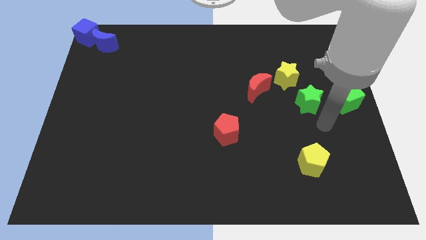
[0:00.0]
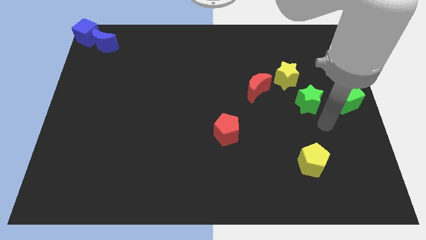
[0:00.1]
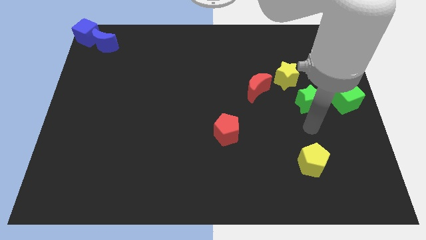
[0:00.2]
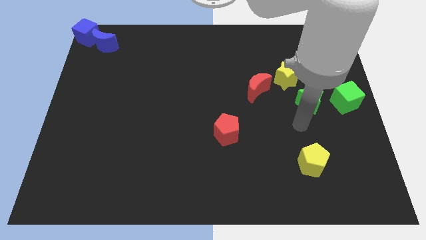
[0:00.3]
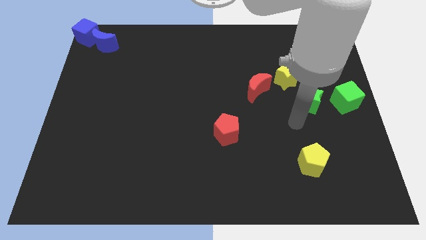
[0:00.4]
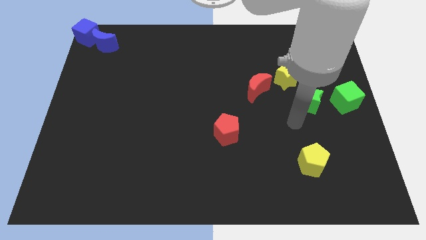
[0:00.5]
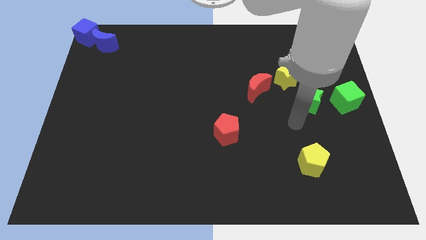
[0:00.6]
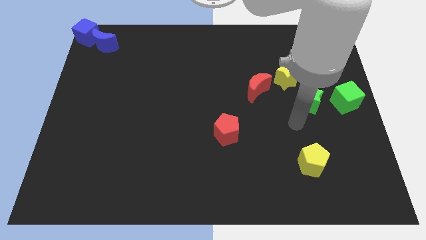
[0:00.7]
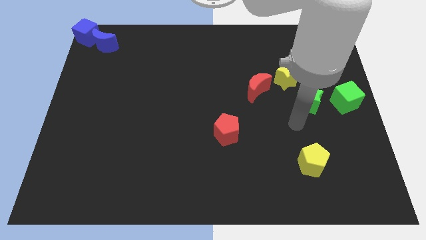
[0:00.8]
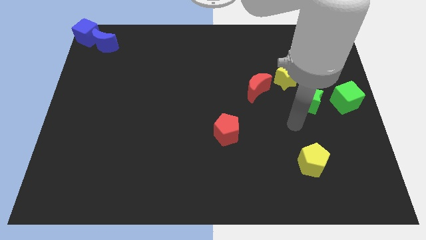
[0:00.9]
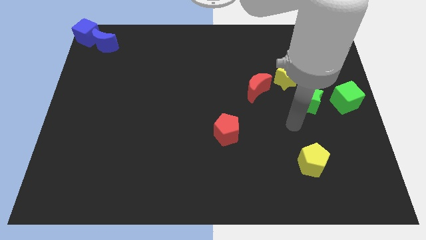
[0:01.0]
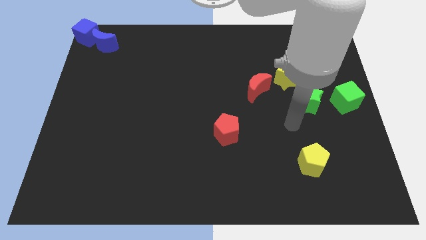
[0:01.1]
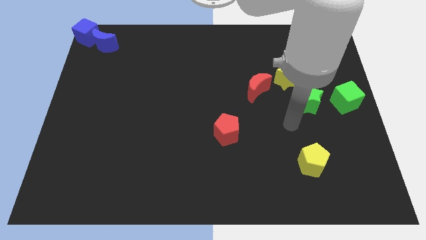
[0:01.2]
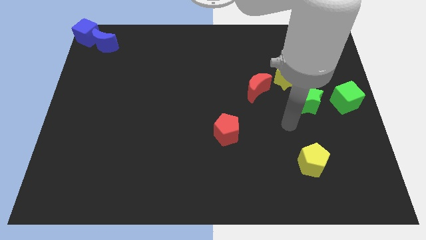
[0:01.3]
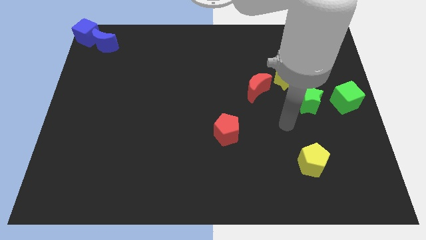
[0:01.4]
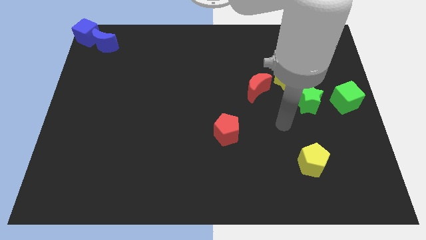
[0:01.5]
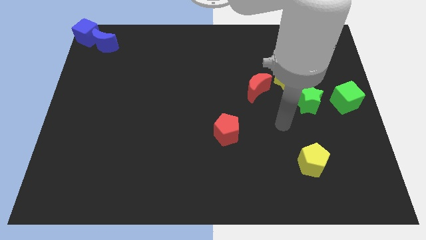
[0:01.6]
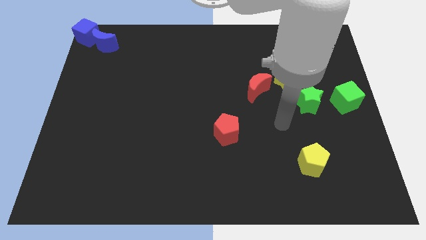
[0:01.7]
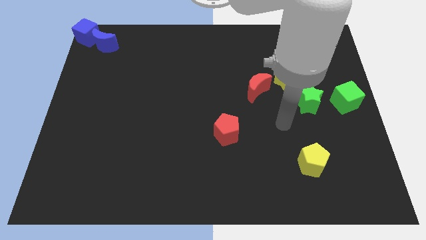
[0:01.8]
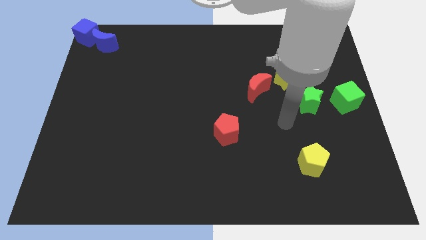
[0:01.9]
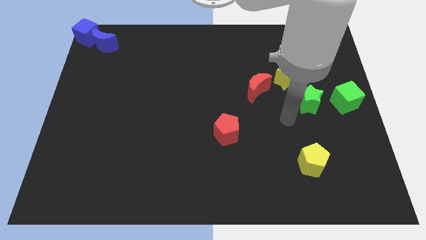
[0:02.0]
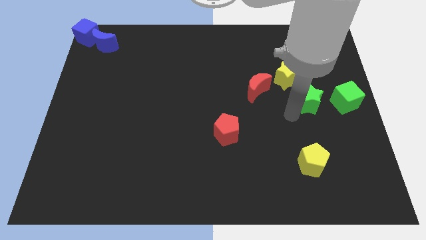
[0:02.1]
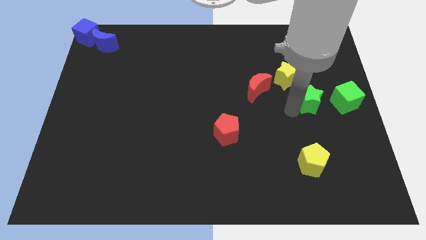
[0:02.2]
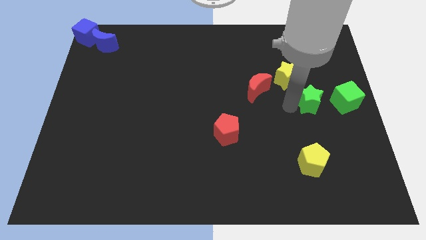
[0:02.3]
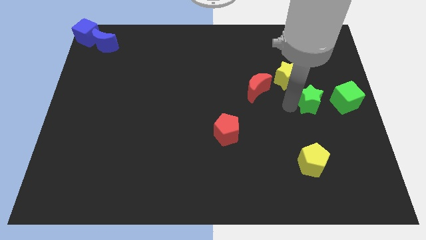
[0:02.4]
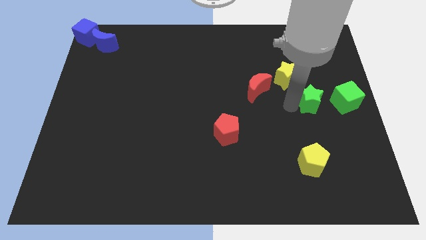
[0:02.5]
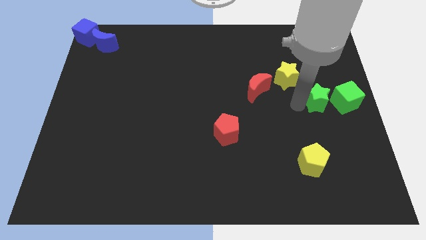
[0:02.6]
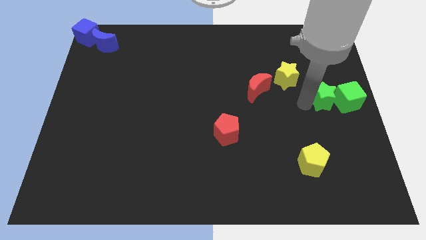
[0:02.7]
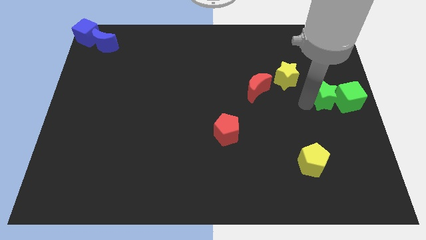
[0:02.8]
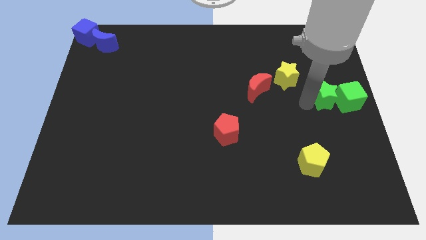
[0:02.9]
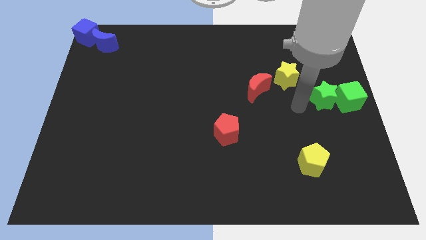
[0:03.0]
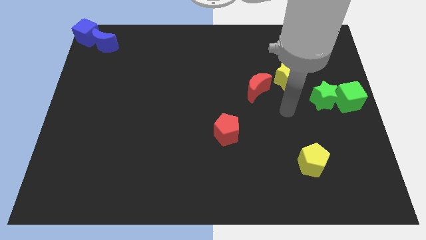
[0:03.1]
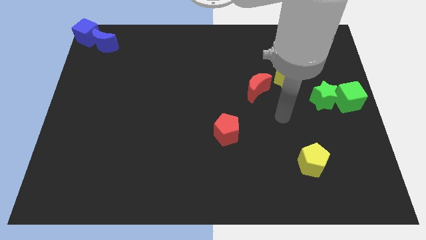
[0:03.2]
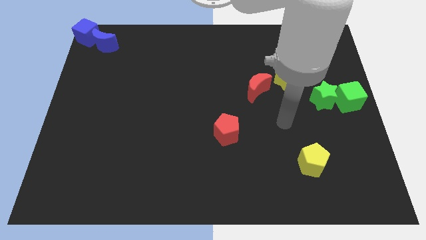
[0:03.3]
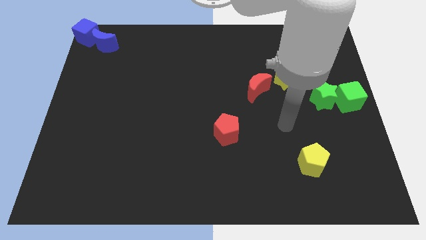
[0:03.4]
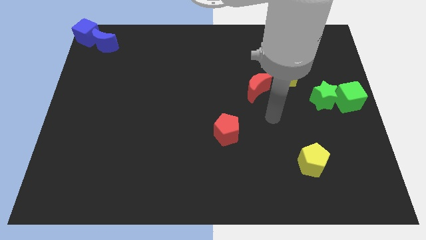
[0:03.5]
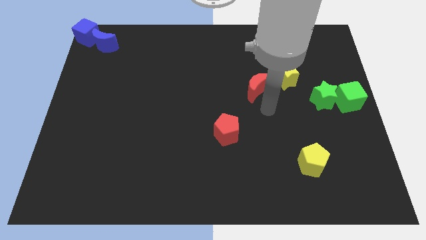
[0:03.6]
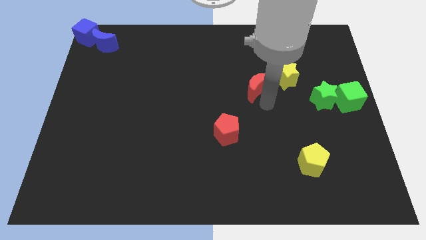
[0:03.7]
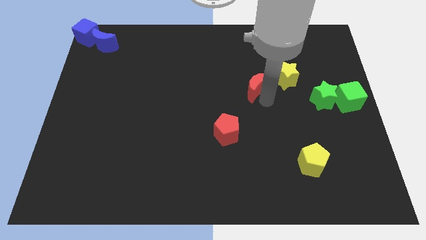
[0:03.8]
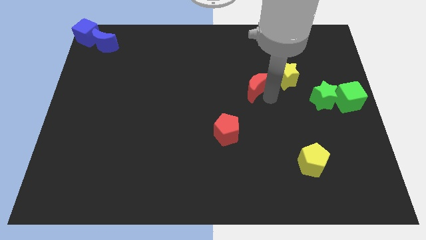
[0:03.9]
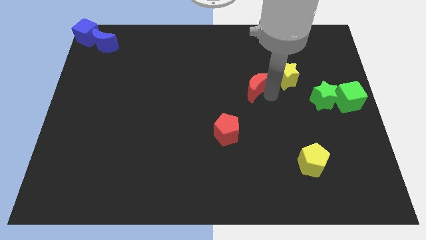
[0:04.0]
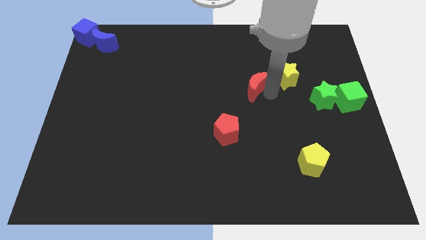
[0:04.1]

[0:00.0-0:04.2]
place green star near to the green cube

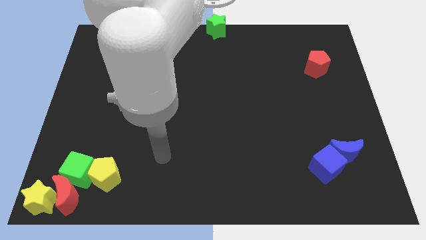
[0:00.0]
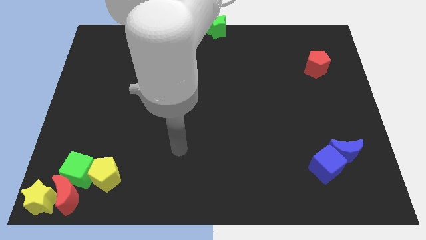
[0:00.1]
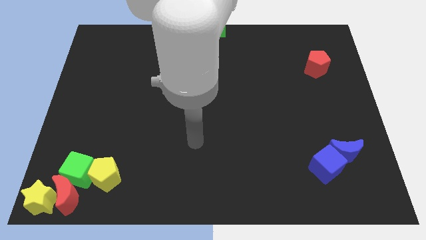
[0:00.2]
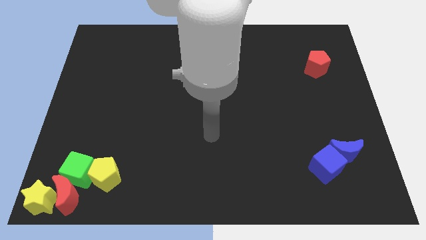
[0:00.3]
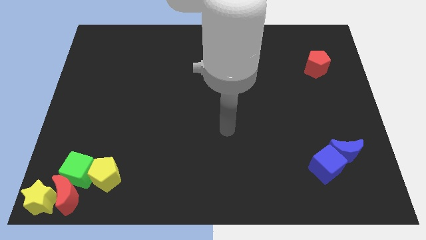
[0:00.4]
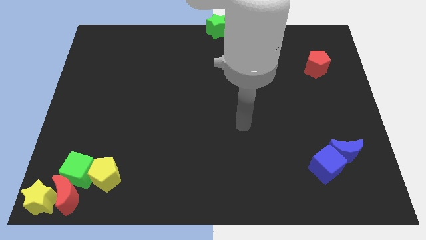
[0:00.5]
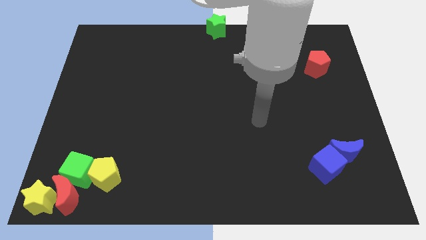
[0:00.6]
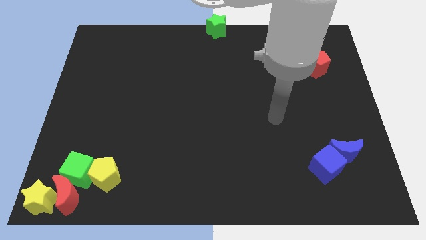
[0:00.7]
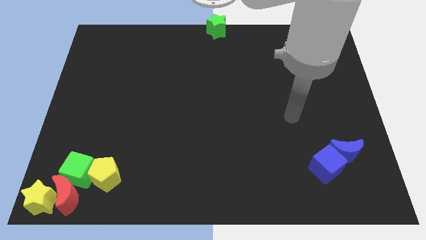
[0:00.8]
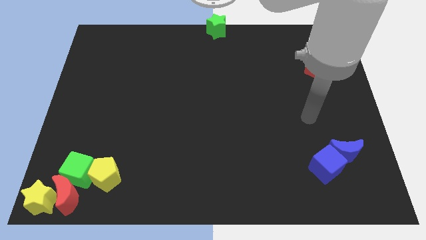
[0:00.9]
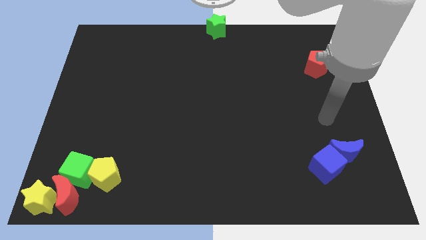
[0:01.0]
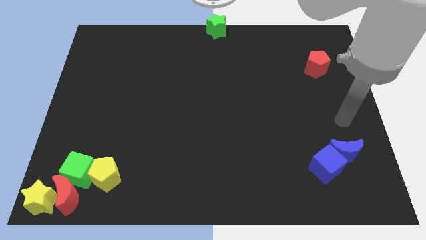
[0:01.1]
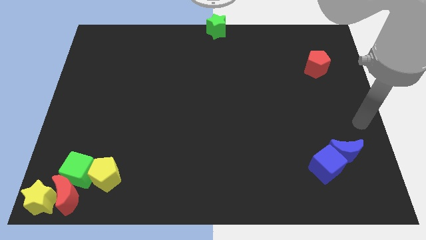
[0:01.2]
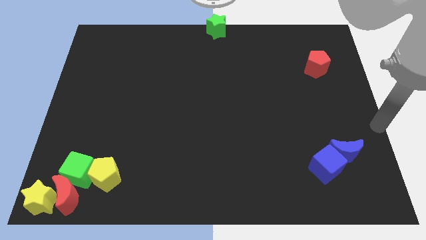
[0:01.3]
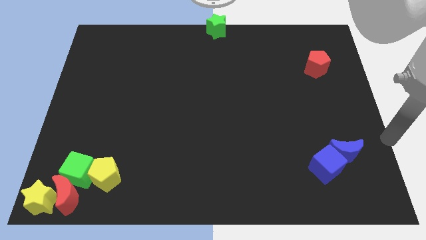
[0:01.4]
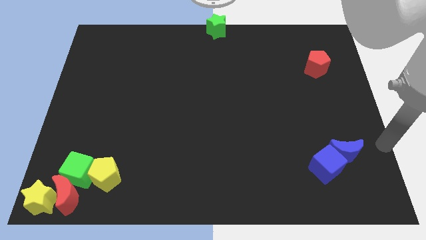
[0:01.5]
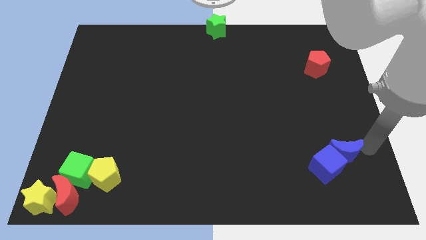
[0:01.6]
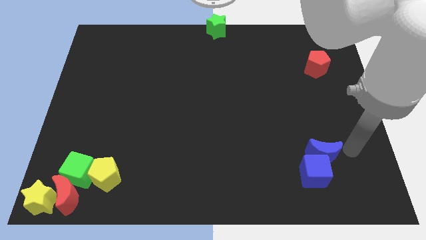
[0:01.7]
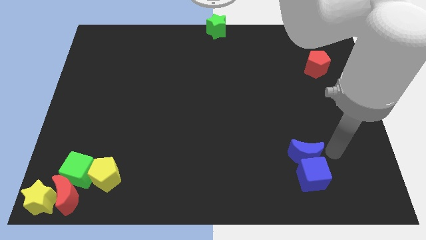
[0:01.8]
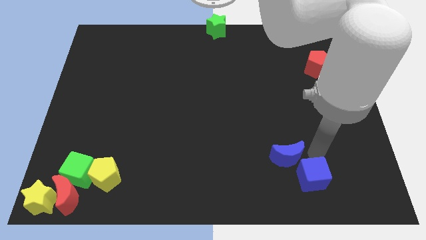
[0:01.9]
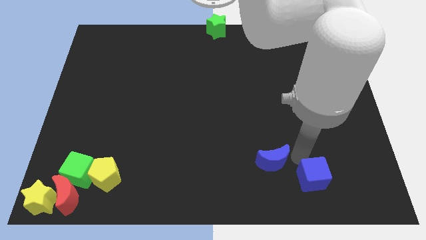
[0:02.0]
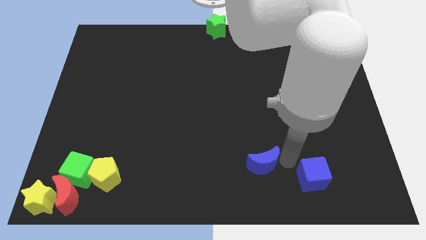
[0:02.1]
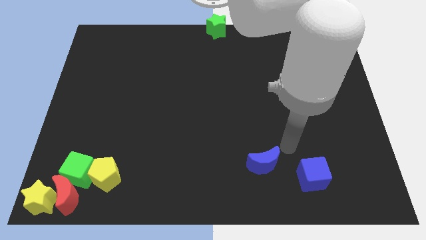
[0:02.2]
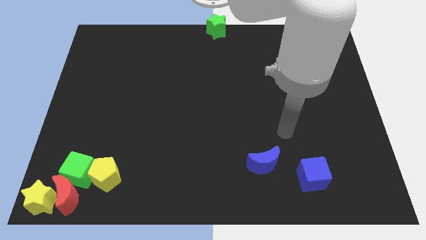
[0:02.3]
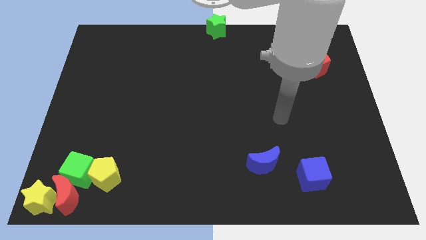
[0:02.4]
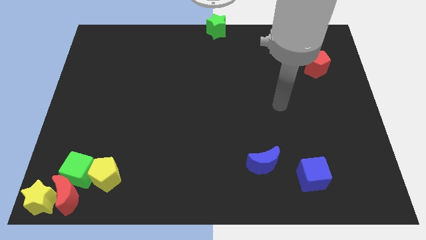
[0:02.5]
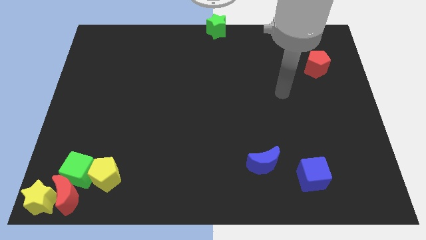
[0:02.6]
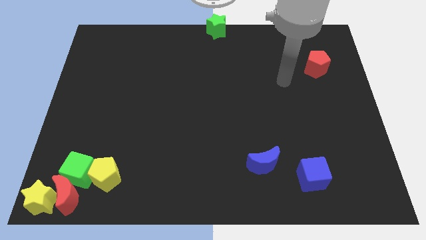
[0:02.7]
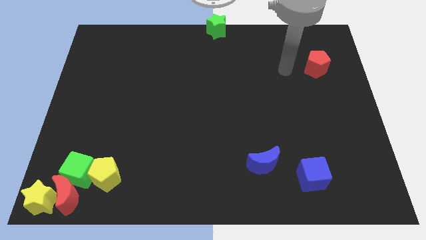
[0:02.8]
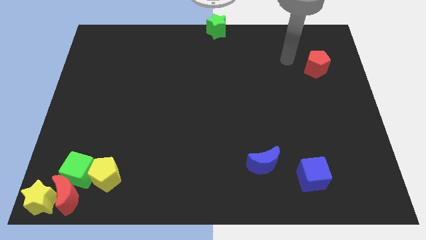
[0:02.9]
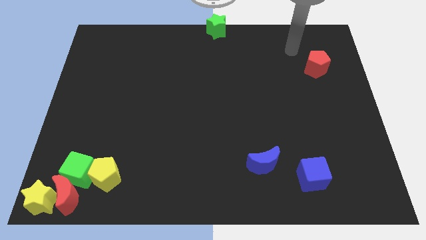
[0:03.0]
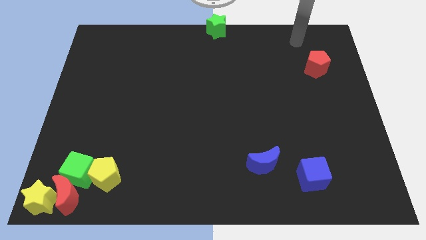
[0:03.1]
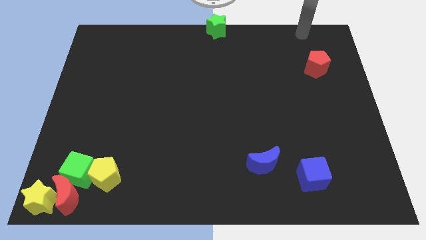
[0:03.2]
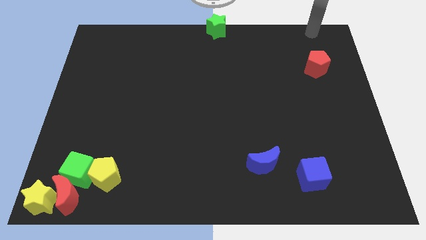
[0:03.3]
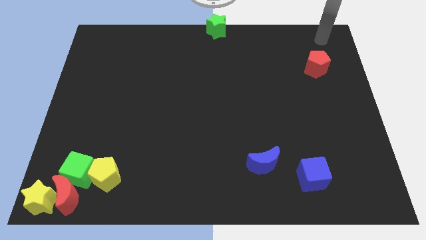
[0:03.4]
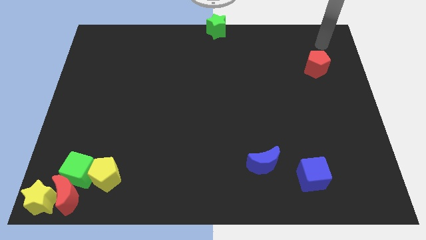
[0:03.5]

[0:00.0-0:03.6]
separate the blue crescent from the blue cube

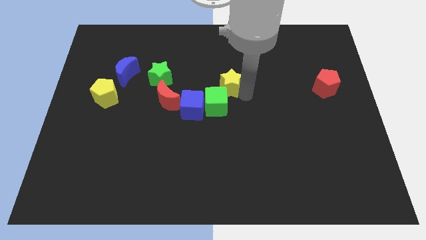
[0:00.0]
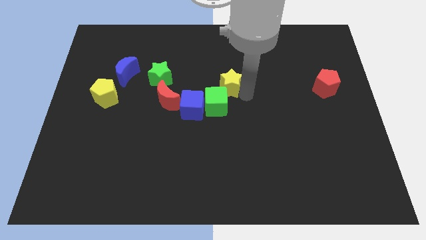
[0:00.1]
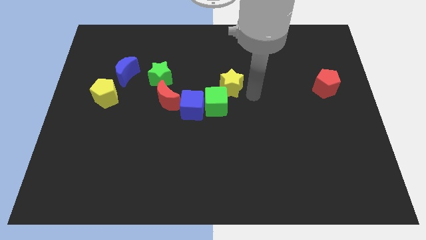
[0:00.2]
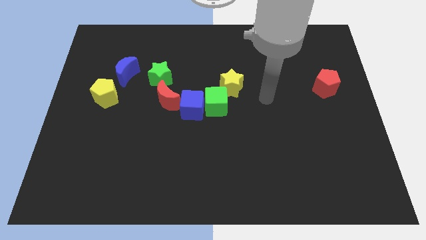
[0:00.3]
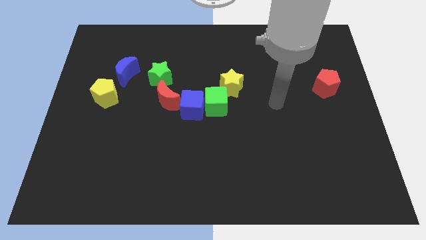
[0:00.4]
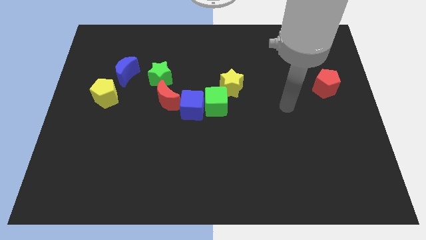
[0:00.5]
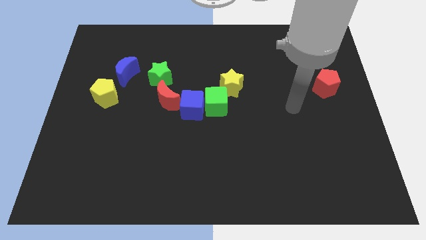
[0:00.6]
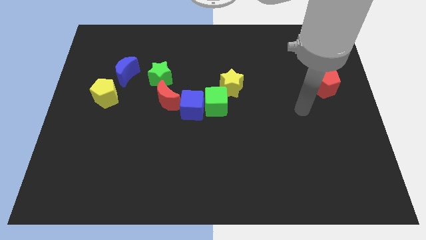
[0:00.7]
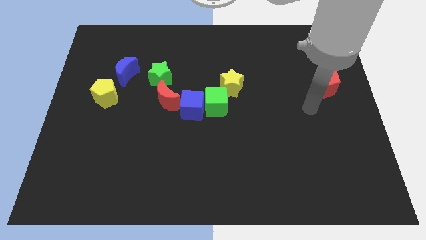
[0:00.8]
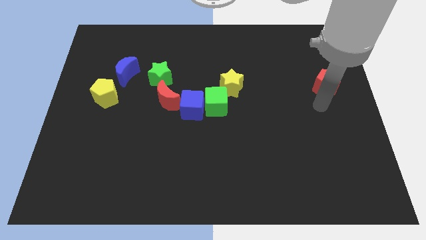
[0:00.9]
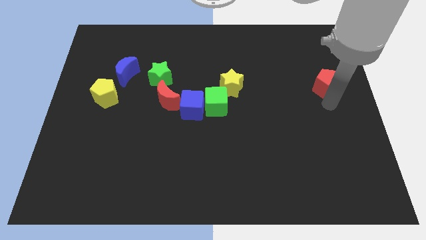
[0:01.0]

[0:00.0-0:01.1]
place the arm at the bottom side of the red pentagon
